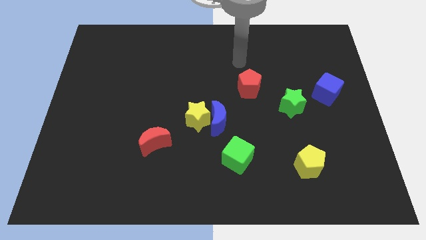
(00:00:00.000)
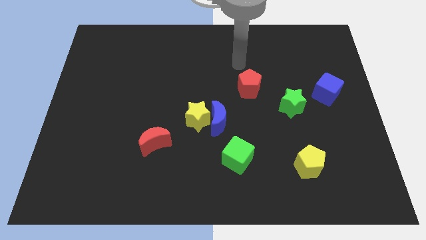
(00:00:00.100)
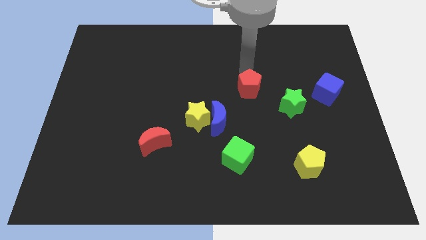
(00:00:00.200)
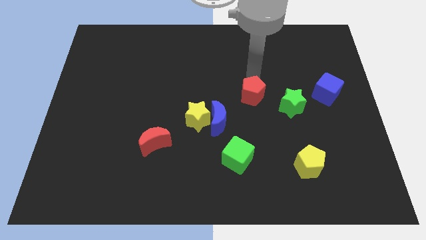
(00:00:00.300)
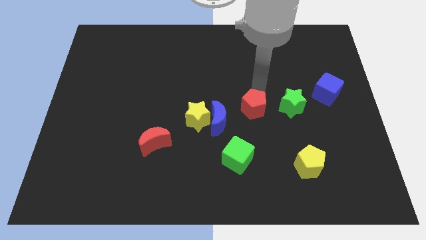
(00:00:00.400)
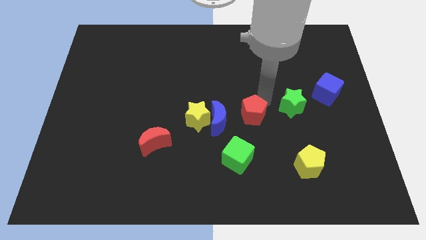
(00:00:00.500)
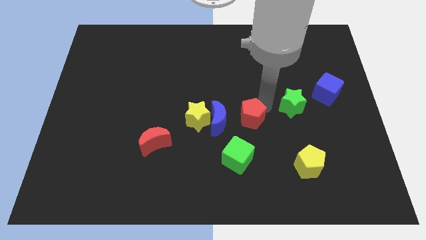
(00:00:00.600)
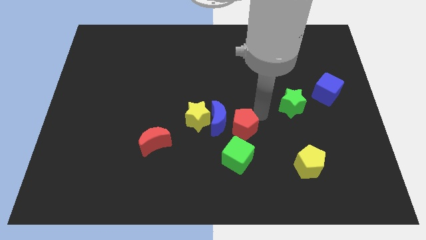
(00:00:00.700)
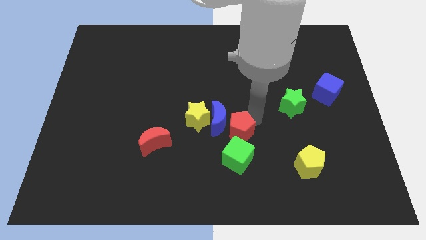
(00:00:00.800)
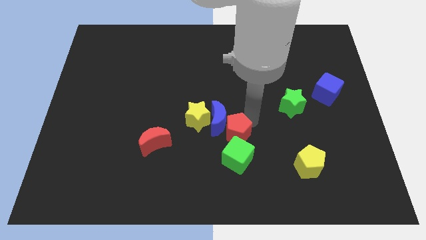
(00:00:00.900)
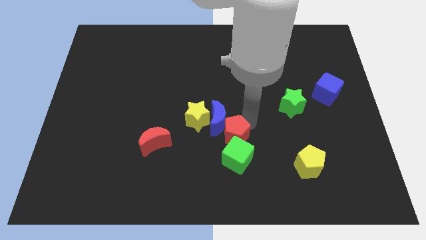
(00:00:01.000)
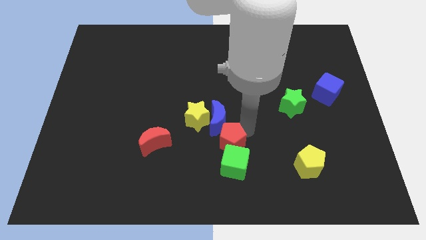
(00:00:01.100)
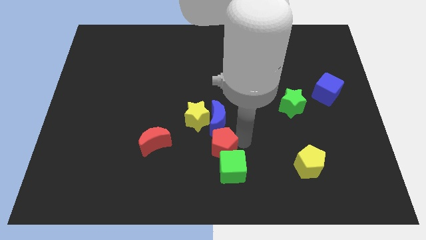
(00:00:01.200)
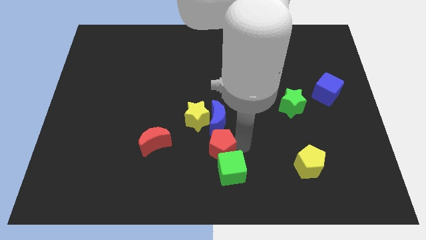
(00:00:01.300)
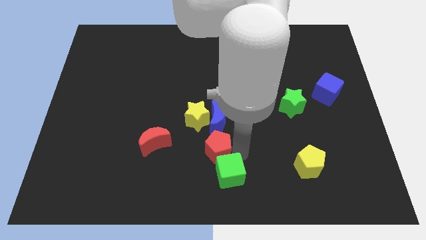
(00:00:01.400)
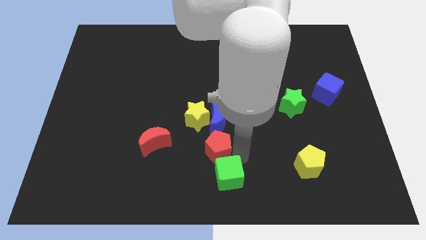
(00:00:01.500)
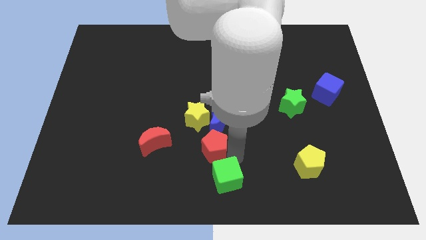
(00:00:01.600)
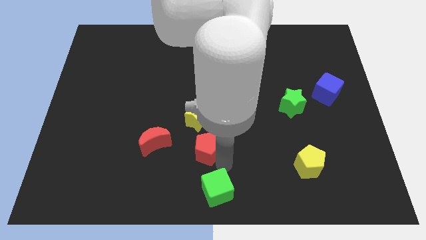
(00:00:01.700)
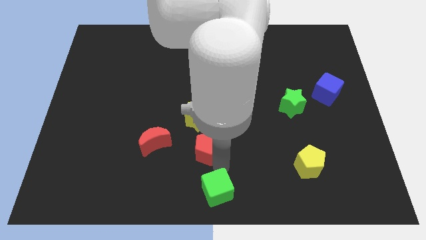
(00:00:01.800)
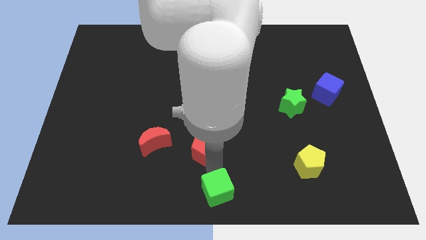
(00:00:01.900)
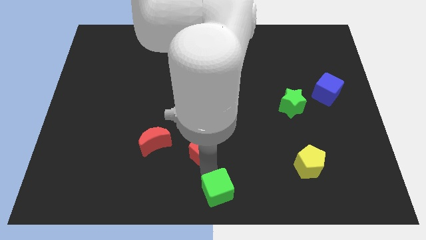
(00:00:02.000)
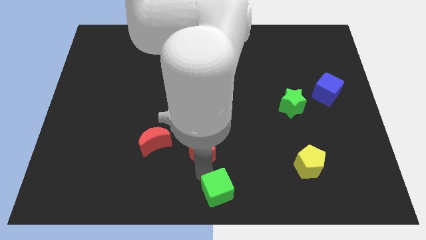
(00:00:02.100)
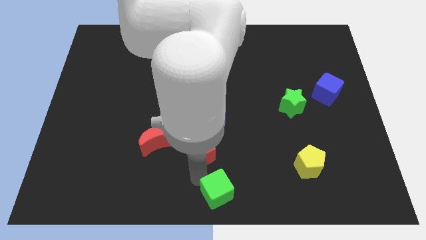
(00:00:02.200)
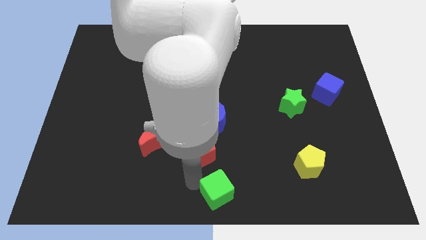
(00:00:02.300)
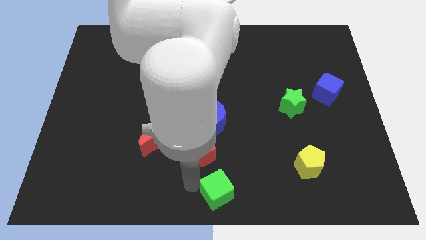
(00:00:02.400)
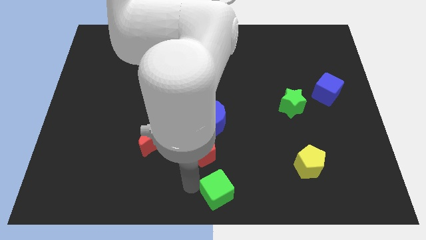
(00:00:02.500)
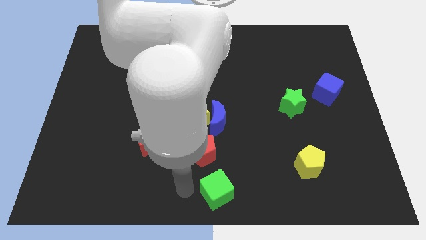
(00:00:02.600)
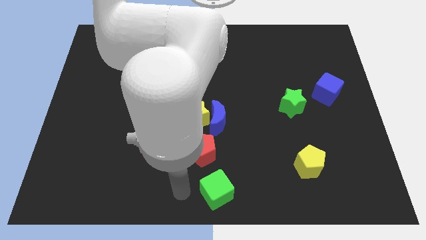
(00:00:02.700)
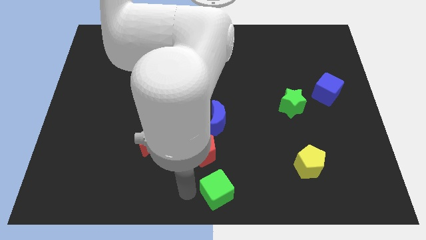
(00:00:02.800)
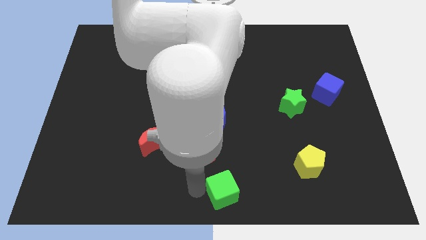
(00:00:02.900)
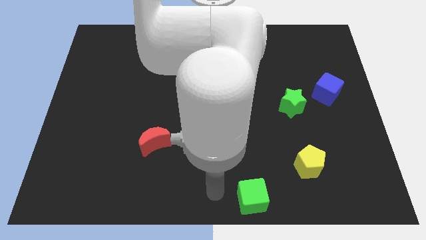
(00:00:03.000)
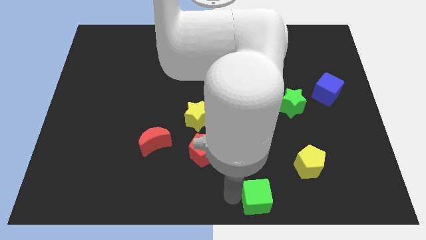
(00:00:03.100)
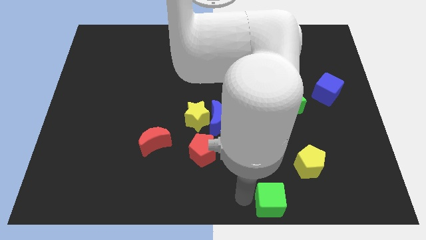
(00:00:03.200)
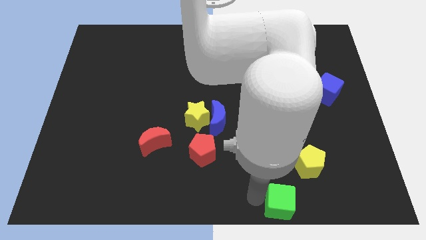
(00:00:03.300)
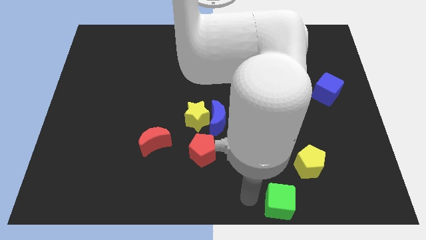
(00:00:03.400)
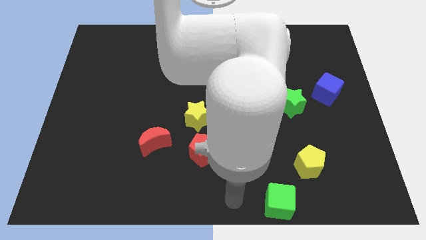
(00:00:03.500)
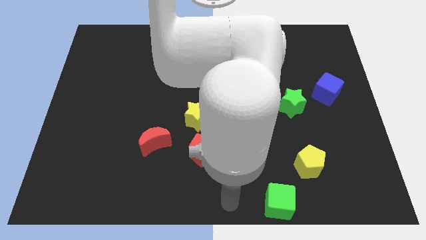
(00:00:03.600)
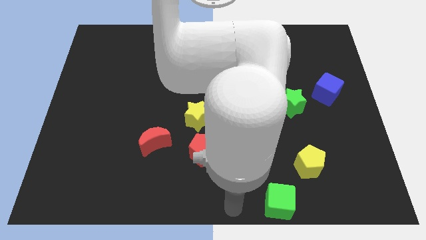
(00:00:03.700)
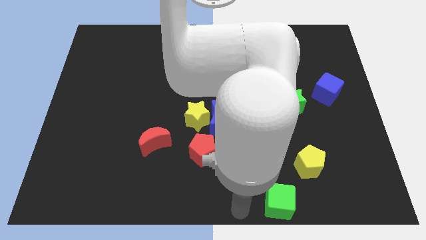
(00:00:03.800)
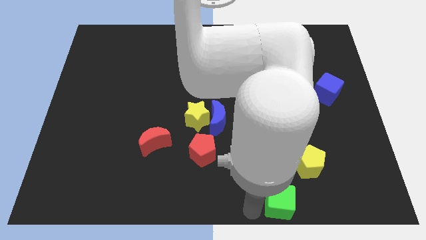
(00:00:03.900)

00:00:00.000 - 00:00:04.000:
push the red pentagon down to the yellow star

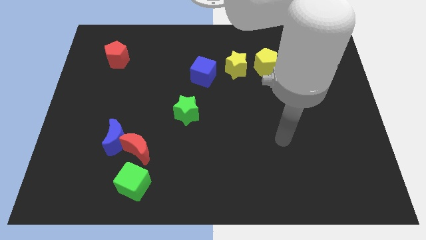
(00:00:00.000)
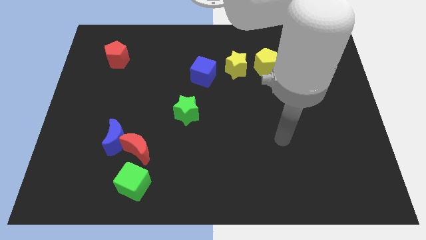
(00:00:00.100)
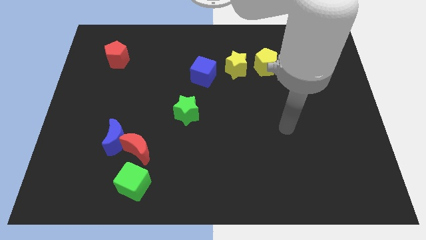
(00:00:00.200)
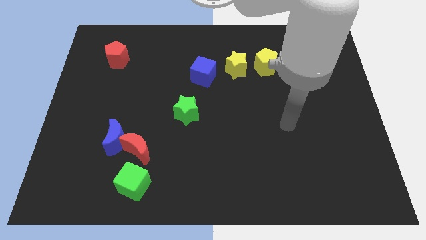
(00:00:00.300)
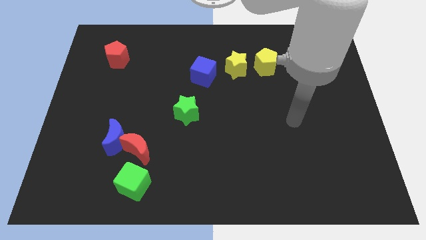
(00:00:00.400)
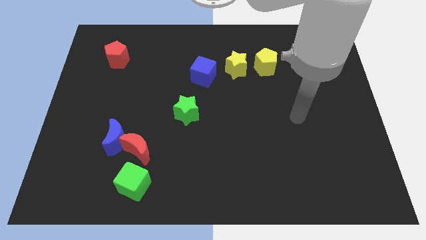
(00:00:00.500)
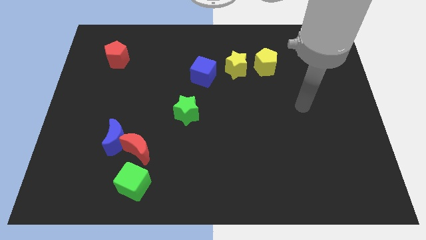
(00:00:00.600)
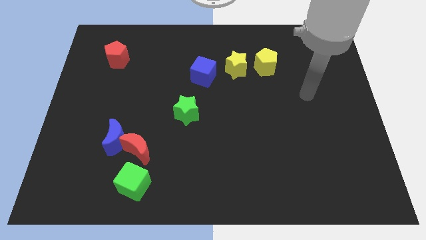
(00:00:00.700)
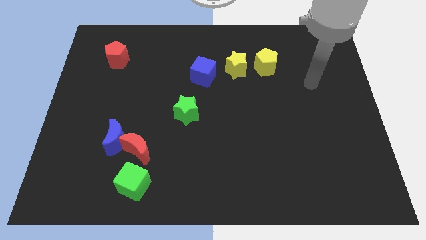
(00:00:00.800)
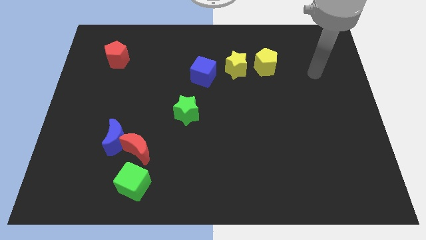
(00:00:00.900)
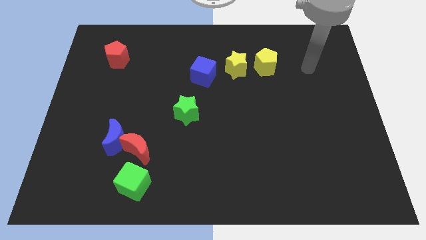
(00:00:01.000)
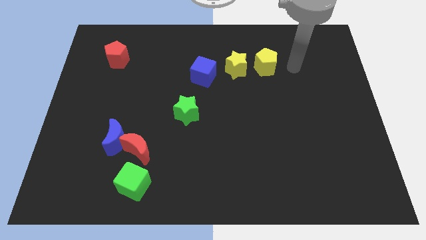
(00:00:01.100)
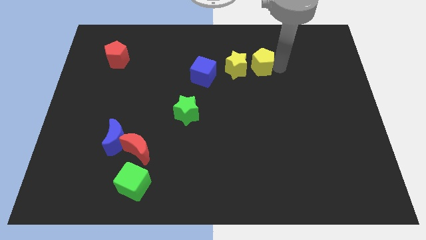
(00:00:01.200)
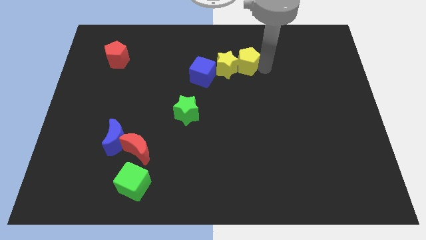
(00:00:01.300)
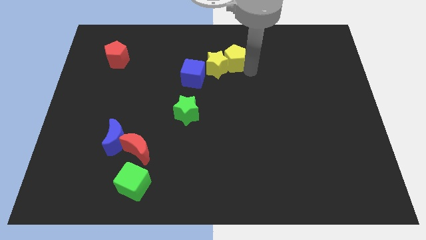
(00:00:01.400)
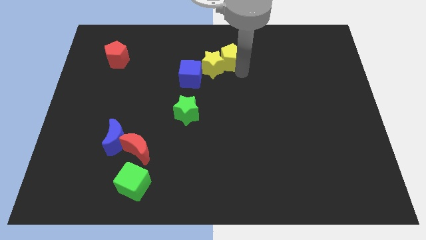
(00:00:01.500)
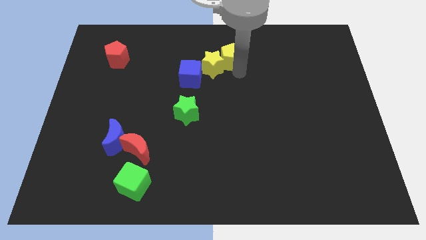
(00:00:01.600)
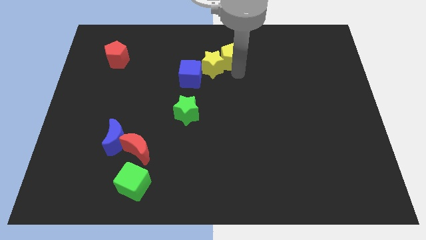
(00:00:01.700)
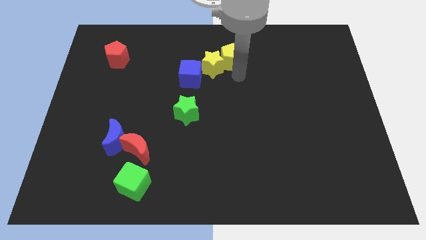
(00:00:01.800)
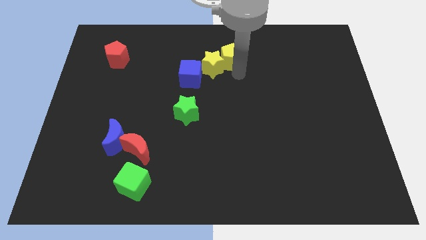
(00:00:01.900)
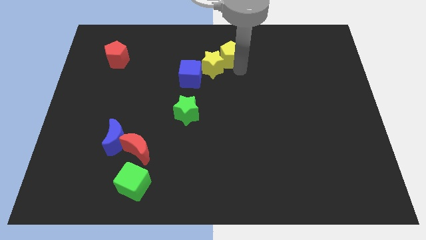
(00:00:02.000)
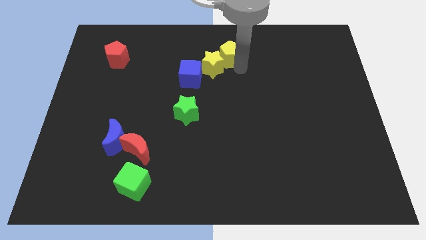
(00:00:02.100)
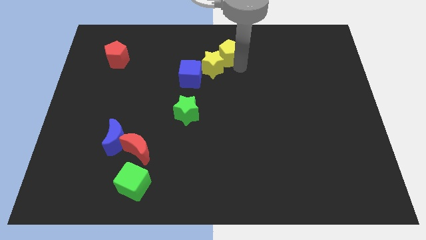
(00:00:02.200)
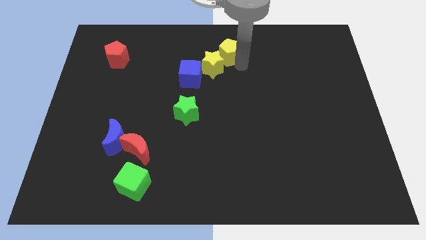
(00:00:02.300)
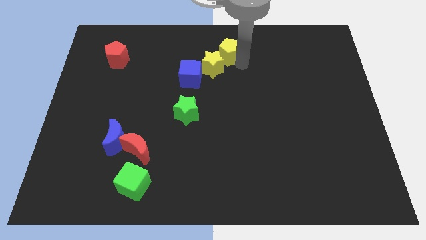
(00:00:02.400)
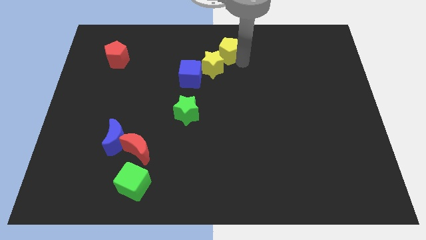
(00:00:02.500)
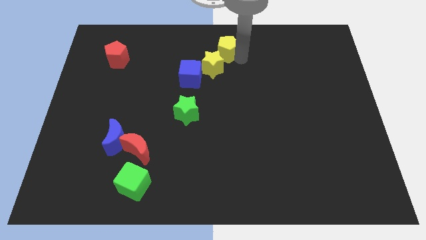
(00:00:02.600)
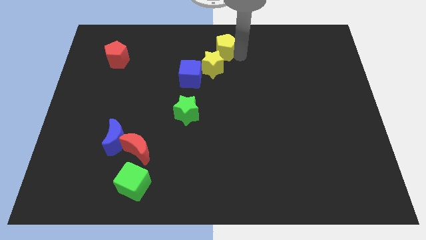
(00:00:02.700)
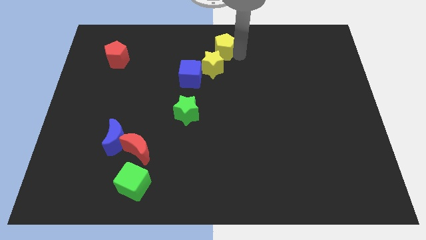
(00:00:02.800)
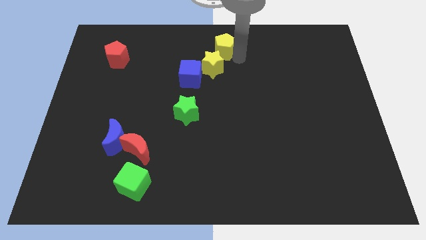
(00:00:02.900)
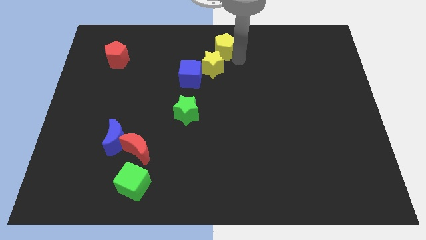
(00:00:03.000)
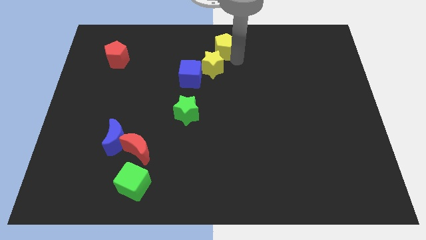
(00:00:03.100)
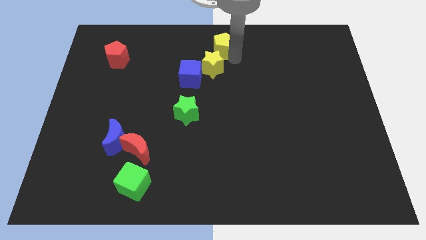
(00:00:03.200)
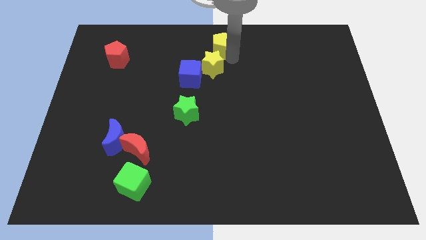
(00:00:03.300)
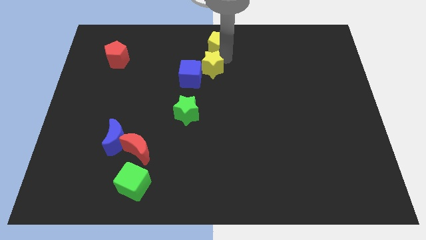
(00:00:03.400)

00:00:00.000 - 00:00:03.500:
place the yellow pentagon above the yellow star

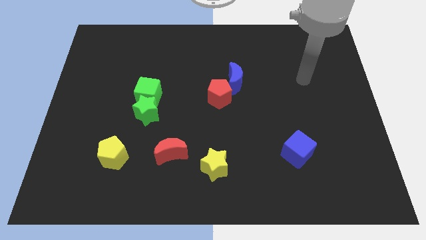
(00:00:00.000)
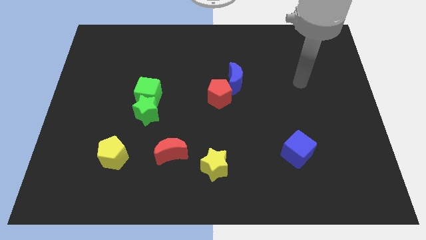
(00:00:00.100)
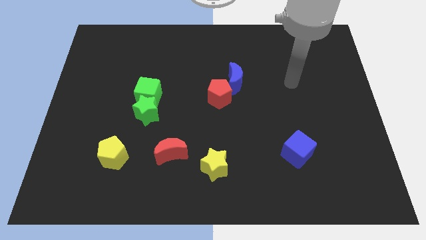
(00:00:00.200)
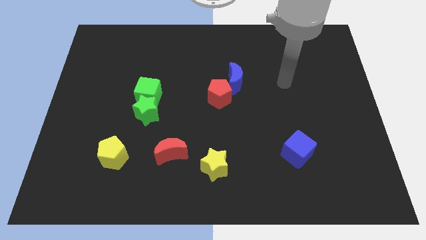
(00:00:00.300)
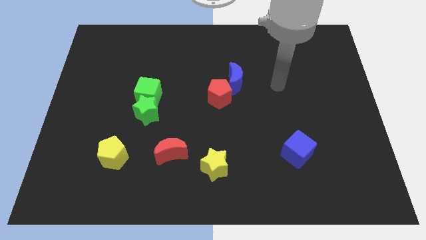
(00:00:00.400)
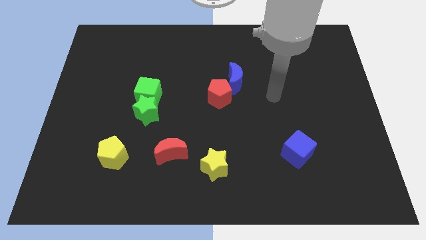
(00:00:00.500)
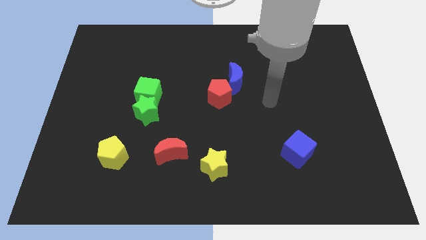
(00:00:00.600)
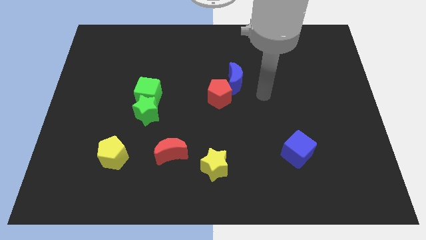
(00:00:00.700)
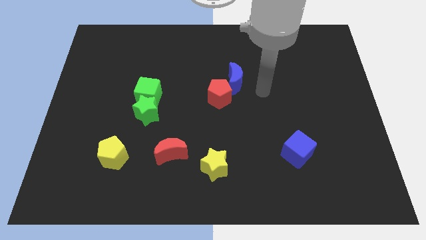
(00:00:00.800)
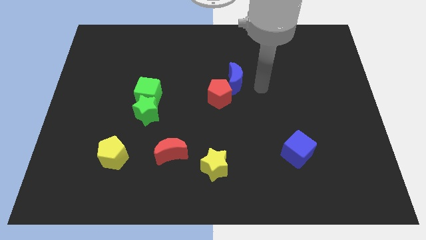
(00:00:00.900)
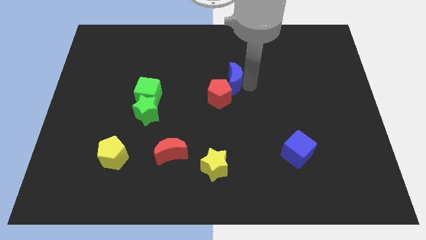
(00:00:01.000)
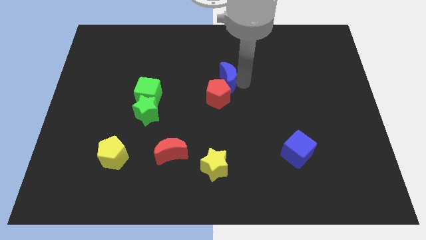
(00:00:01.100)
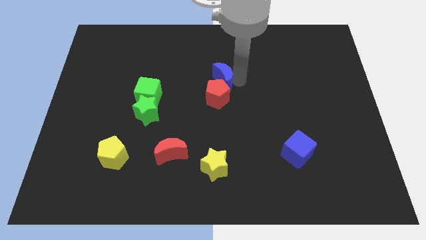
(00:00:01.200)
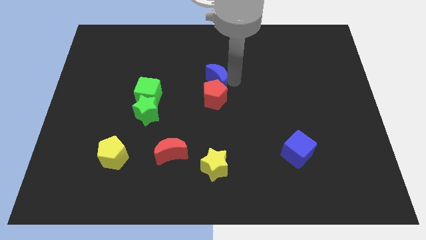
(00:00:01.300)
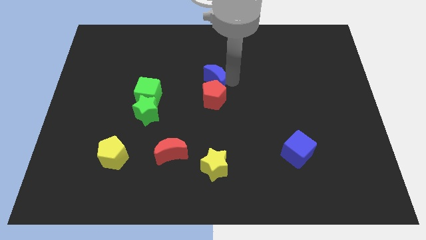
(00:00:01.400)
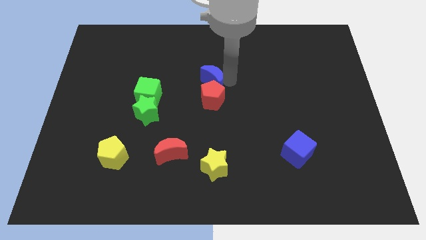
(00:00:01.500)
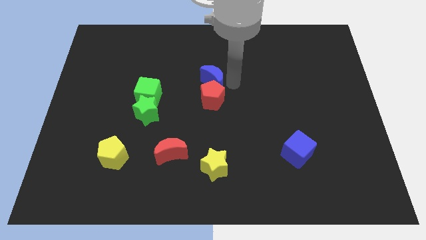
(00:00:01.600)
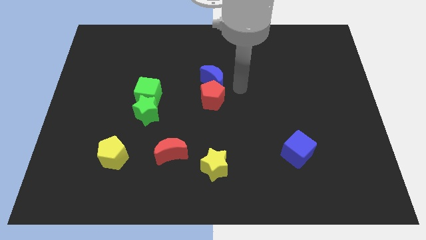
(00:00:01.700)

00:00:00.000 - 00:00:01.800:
push blue crescent into the red pentagon
